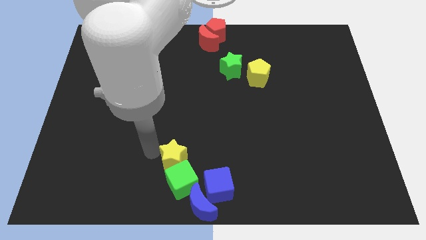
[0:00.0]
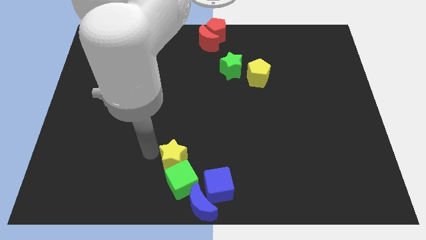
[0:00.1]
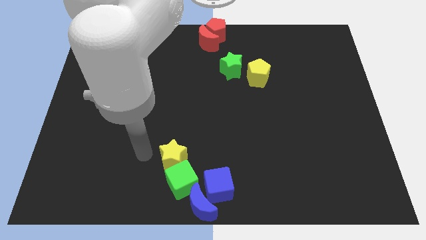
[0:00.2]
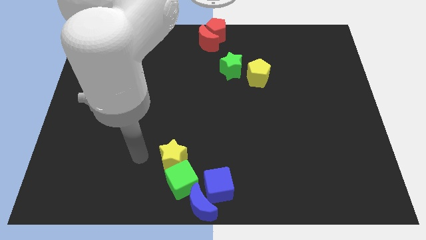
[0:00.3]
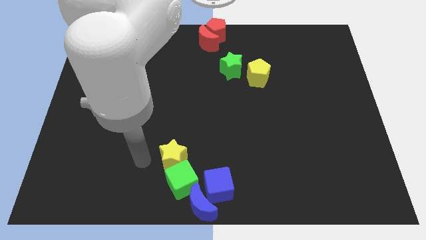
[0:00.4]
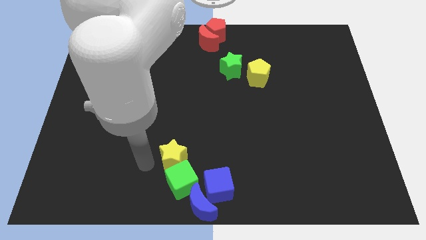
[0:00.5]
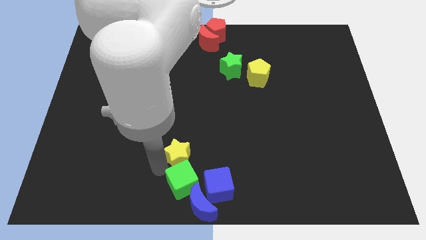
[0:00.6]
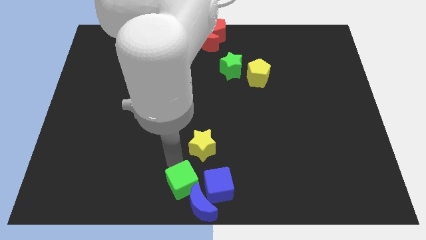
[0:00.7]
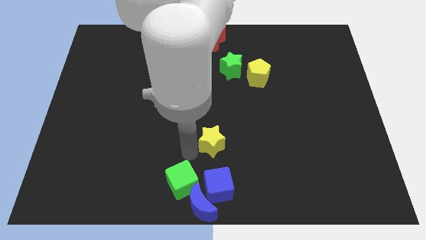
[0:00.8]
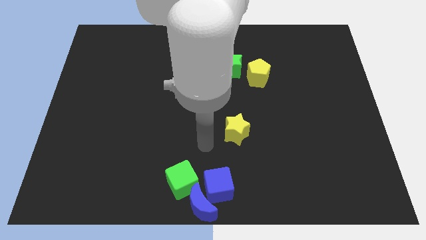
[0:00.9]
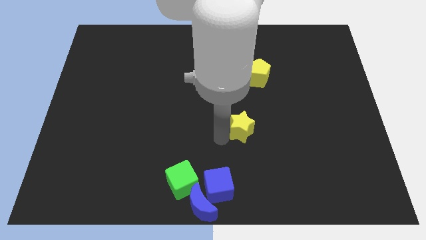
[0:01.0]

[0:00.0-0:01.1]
move the yellow star away from the green cube

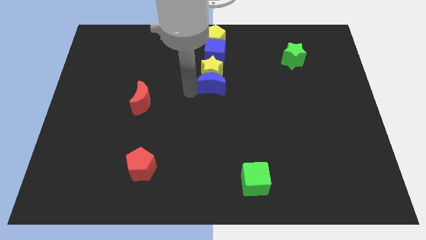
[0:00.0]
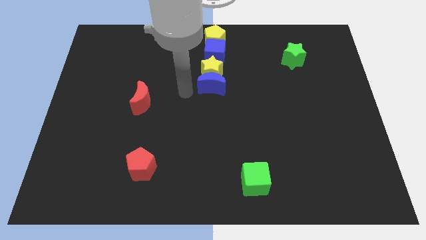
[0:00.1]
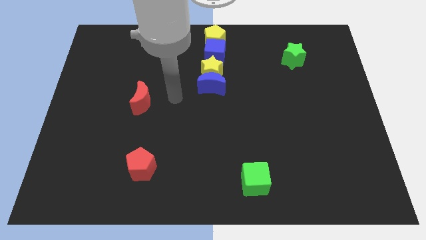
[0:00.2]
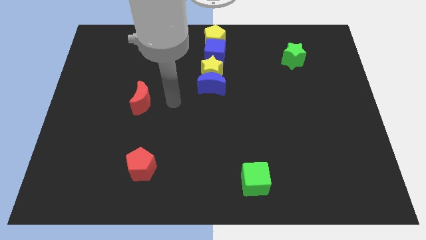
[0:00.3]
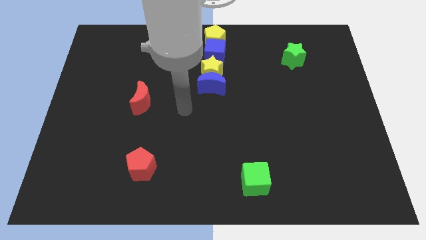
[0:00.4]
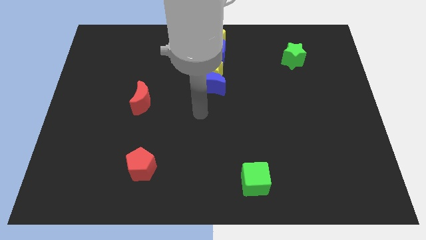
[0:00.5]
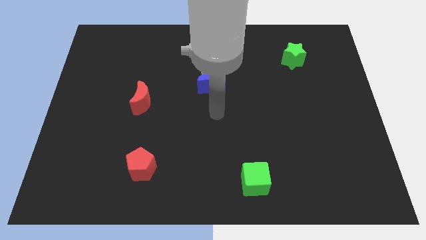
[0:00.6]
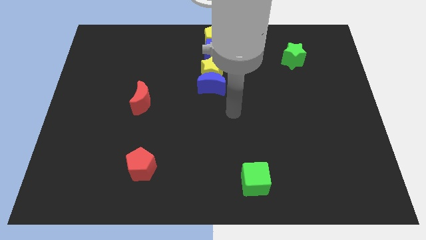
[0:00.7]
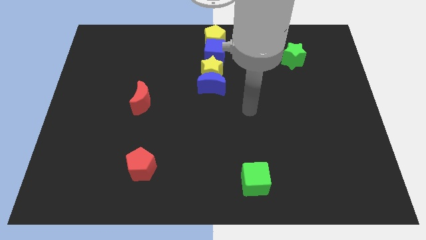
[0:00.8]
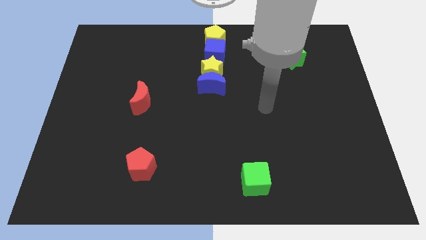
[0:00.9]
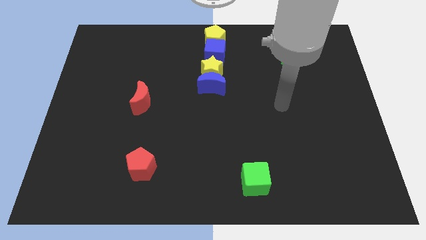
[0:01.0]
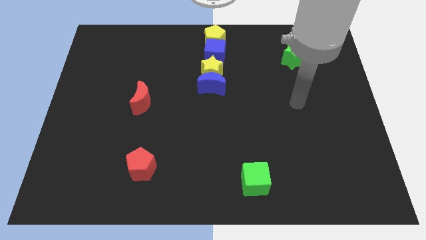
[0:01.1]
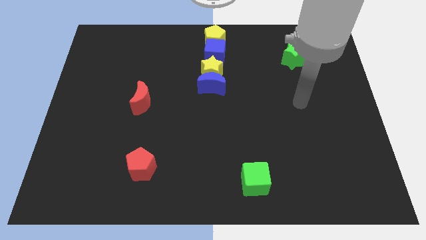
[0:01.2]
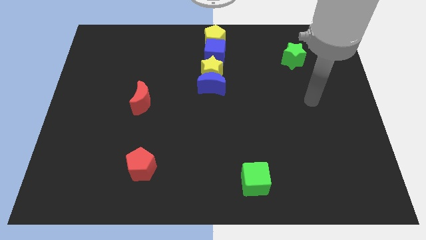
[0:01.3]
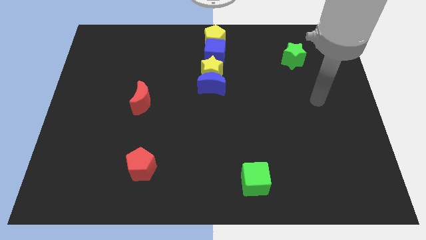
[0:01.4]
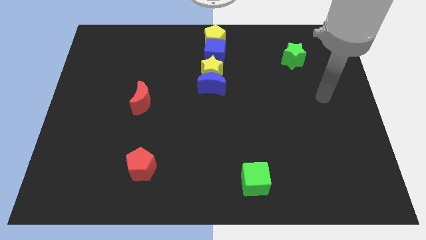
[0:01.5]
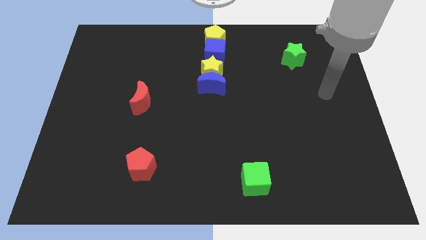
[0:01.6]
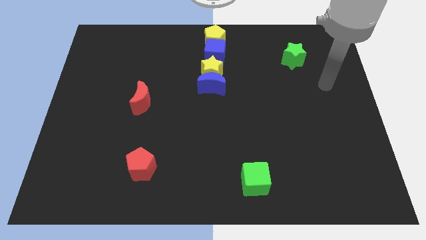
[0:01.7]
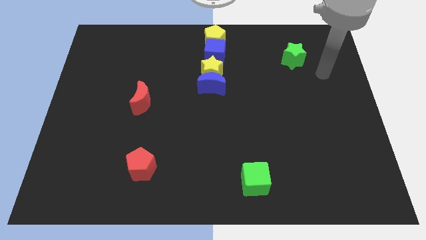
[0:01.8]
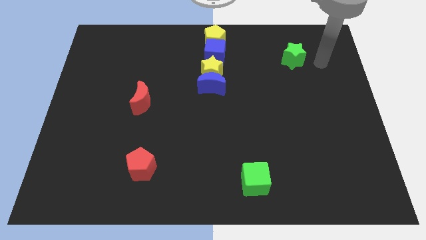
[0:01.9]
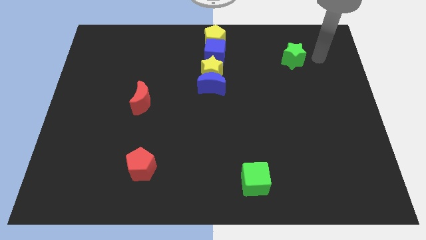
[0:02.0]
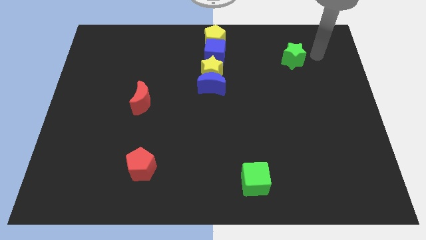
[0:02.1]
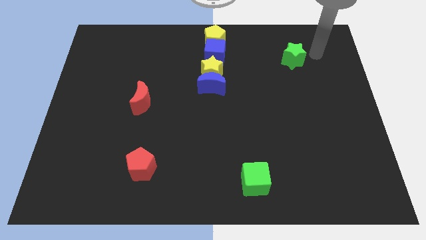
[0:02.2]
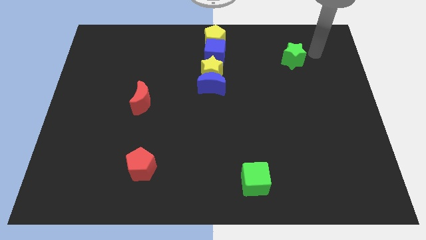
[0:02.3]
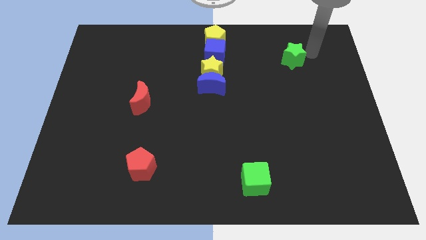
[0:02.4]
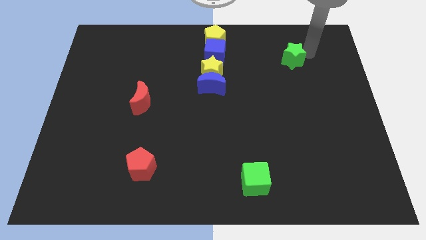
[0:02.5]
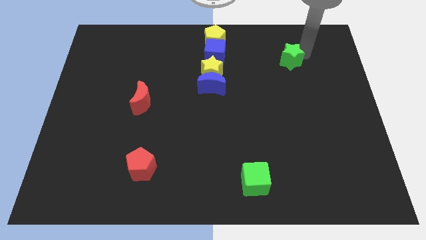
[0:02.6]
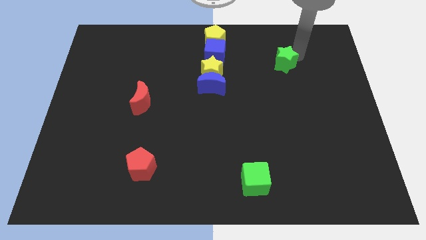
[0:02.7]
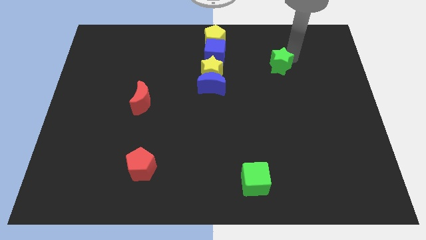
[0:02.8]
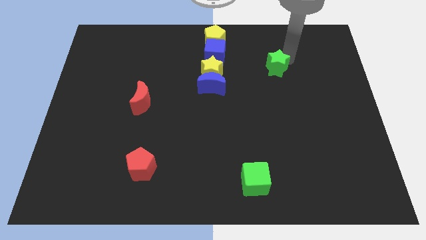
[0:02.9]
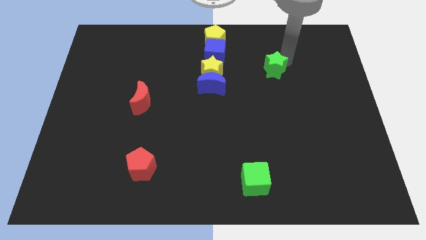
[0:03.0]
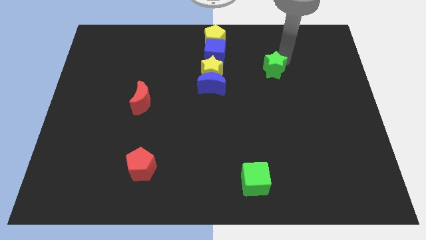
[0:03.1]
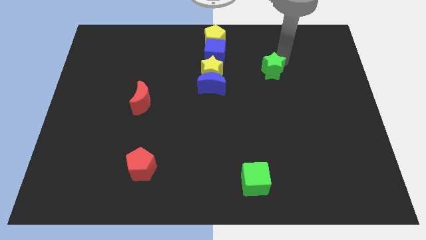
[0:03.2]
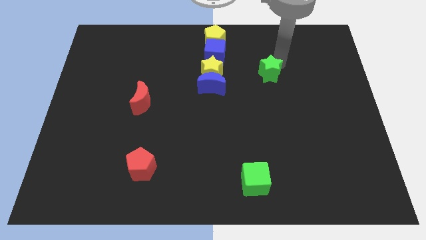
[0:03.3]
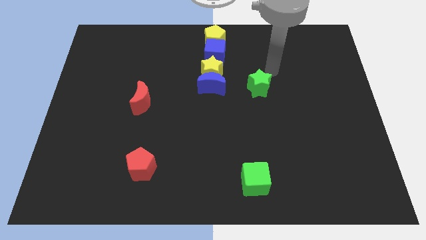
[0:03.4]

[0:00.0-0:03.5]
move your arm close to the green star

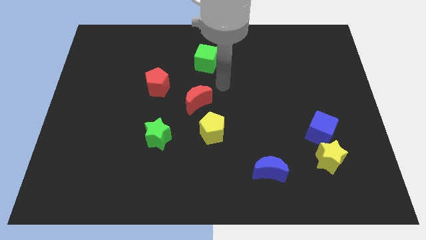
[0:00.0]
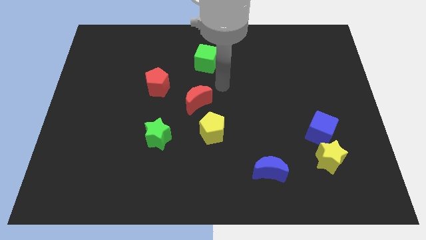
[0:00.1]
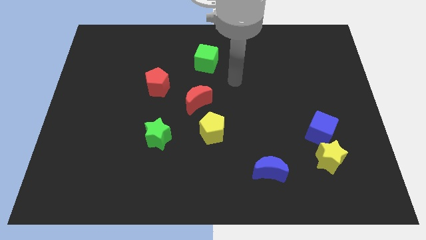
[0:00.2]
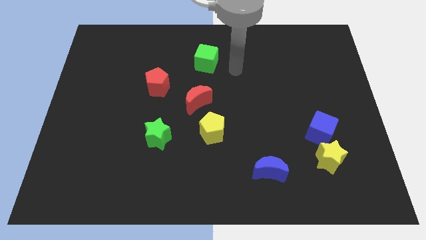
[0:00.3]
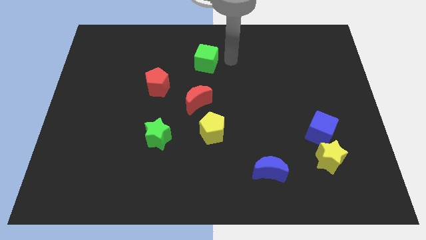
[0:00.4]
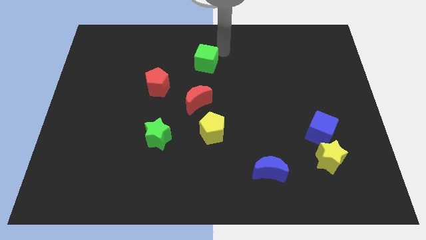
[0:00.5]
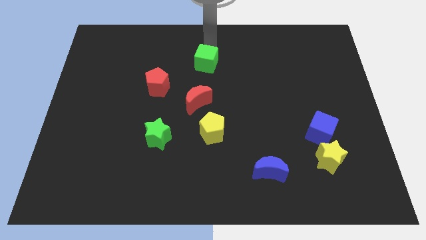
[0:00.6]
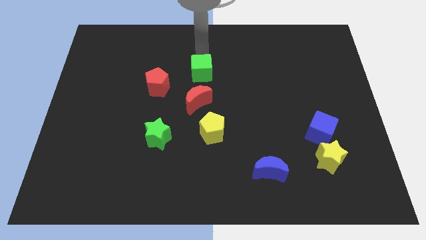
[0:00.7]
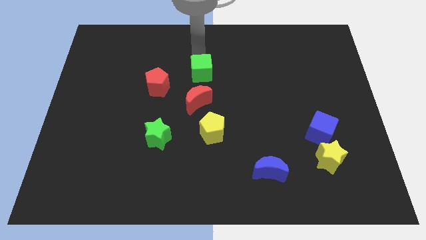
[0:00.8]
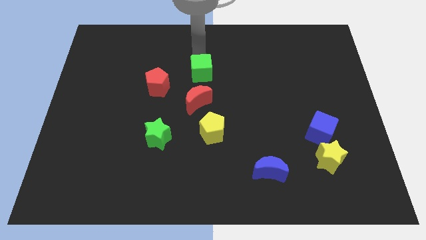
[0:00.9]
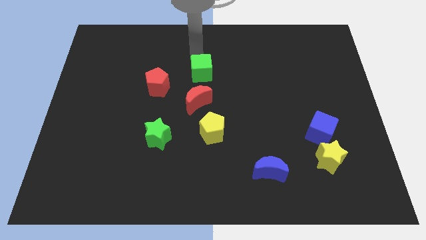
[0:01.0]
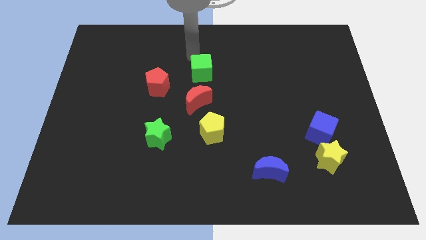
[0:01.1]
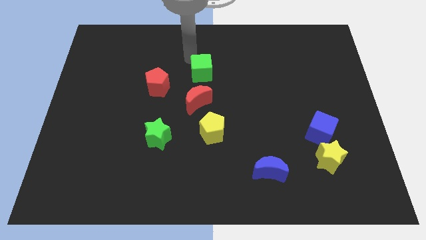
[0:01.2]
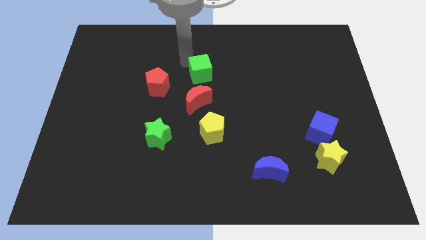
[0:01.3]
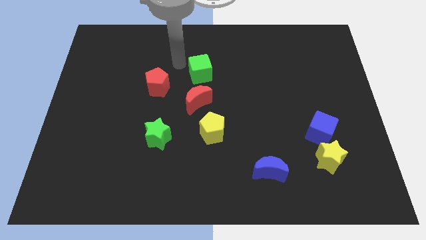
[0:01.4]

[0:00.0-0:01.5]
slide the green cube slightly down

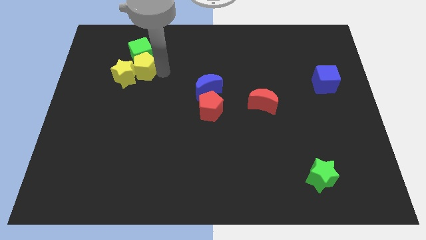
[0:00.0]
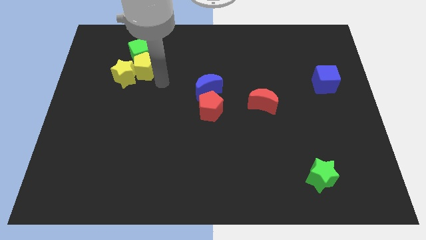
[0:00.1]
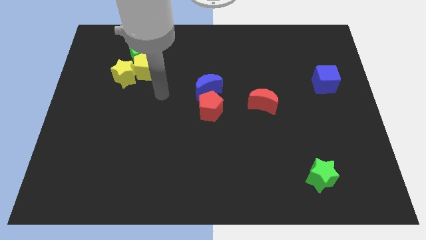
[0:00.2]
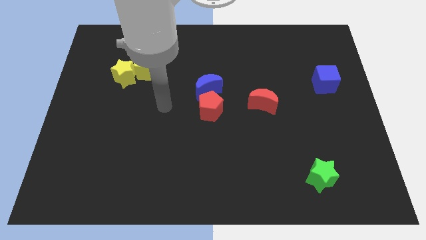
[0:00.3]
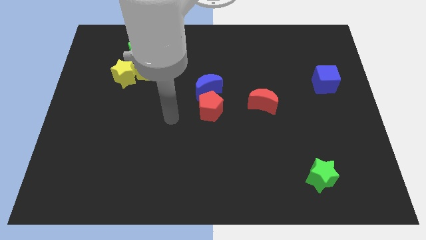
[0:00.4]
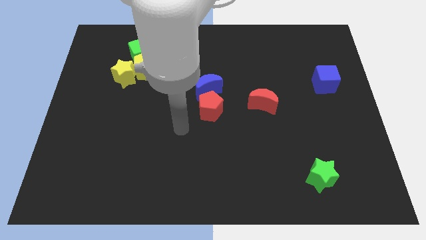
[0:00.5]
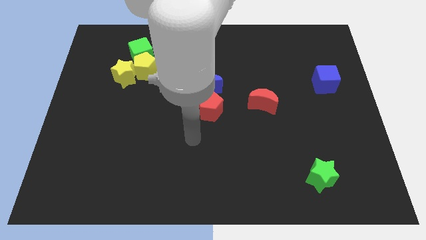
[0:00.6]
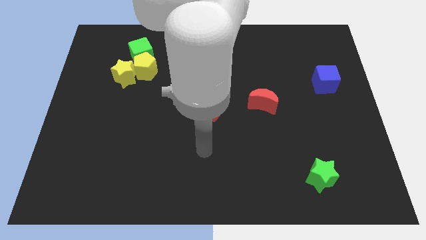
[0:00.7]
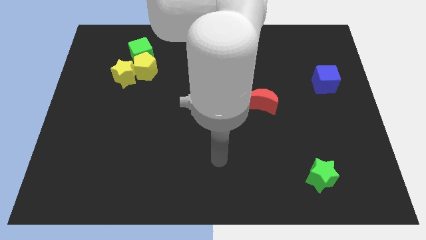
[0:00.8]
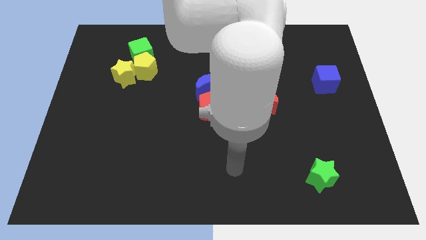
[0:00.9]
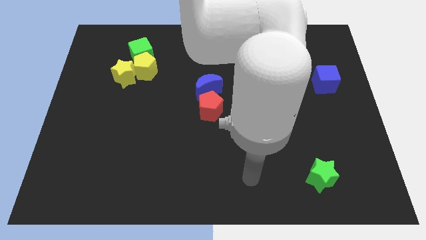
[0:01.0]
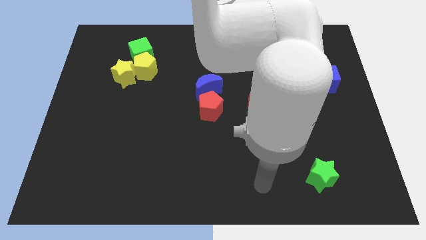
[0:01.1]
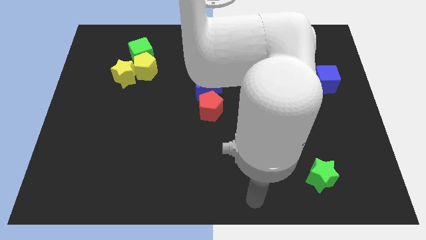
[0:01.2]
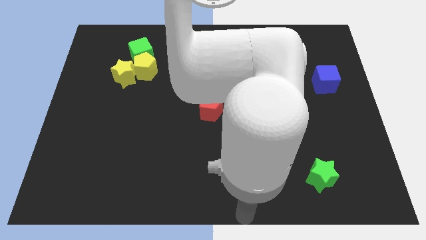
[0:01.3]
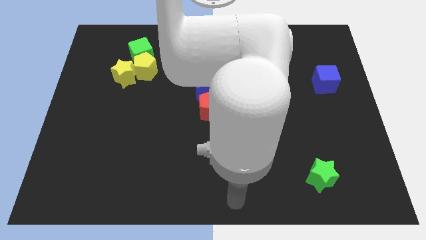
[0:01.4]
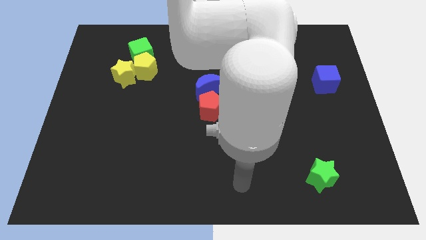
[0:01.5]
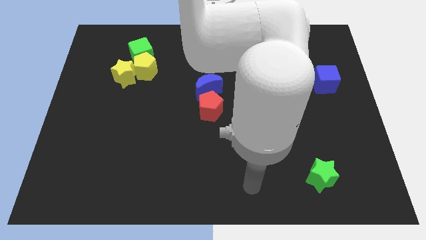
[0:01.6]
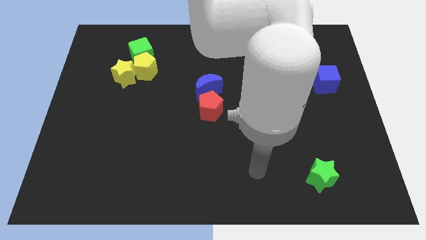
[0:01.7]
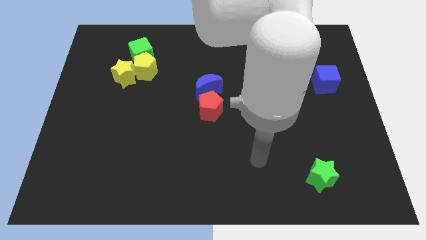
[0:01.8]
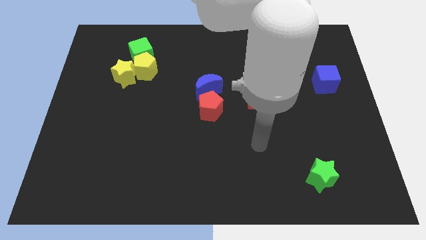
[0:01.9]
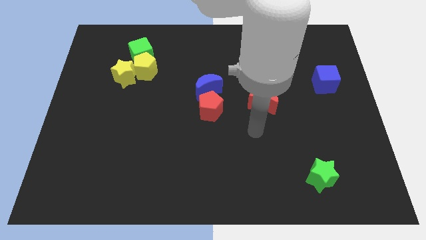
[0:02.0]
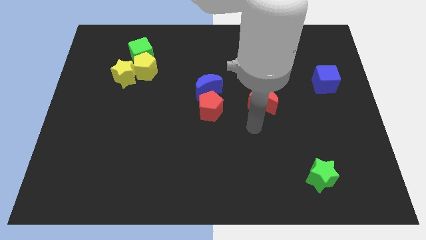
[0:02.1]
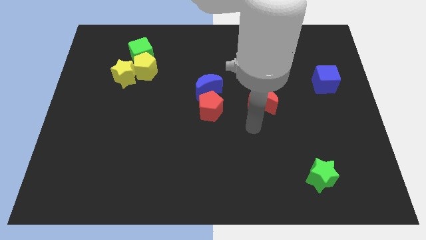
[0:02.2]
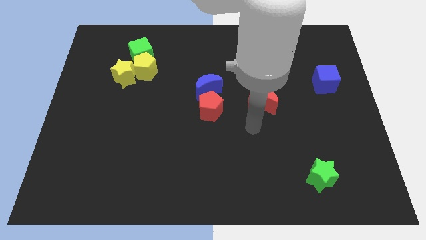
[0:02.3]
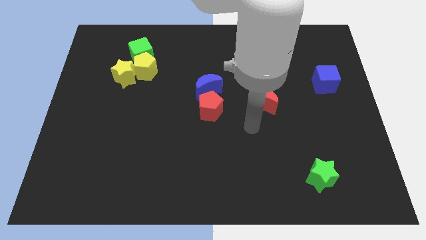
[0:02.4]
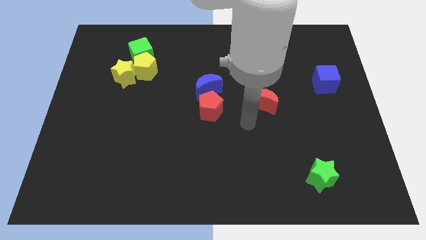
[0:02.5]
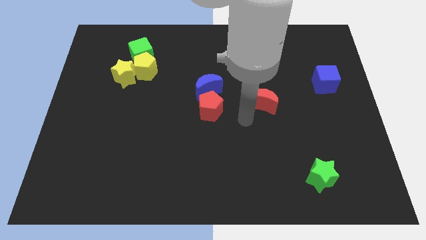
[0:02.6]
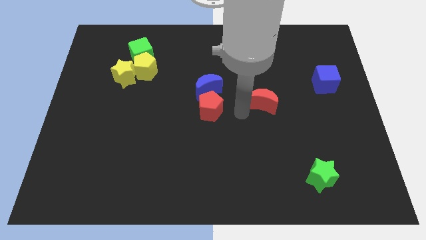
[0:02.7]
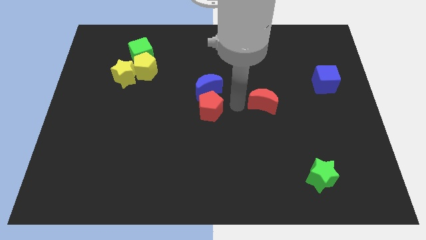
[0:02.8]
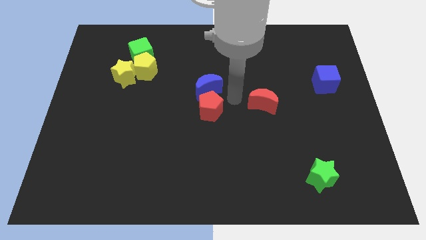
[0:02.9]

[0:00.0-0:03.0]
move the arm to the left of the red moon
